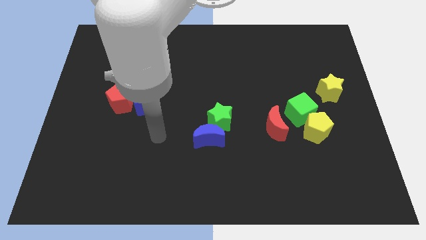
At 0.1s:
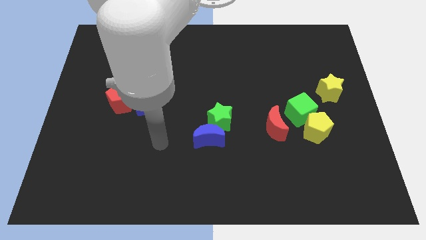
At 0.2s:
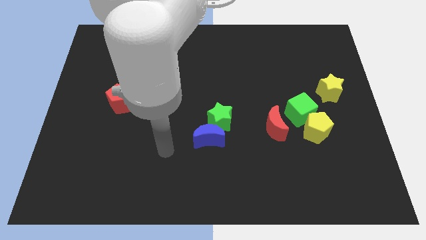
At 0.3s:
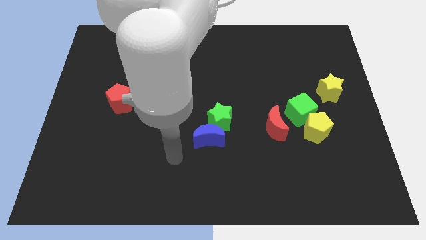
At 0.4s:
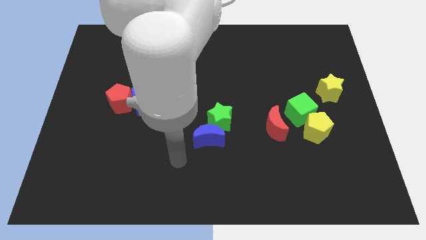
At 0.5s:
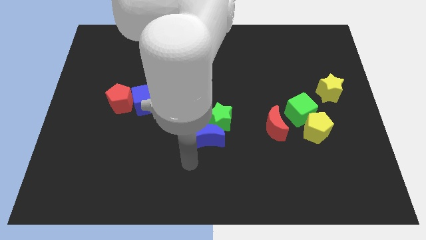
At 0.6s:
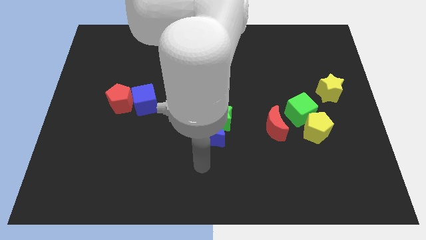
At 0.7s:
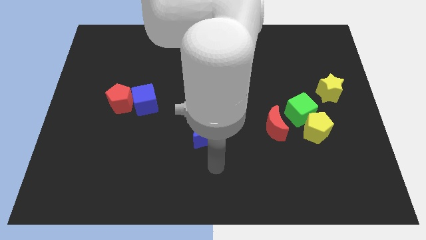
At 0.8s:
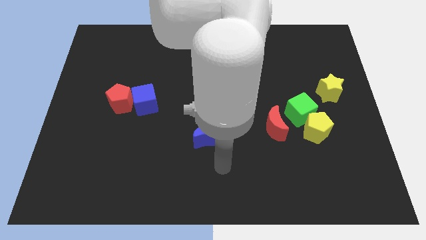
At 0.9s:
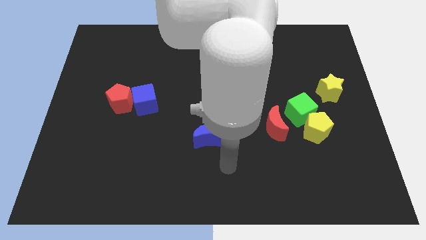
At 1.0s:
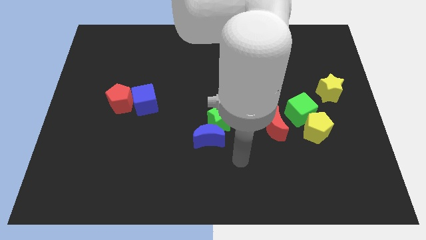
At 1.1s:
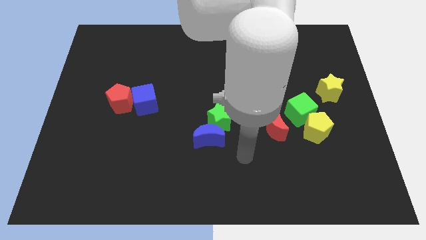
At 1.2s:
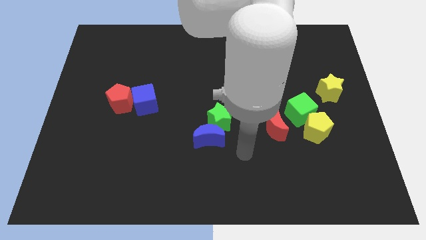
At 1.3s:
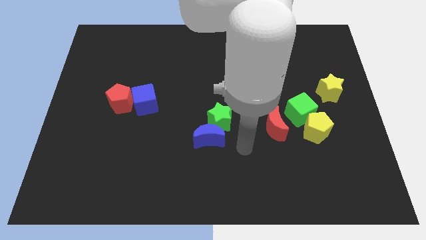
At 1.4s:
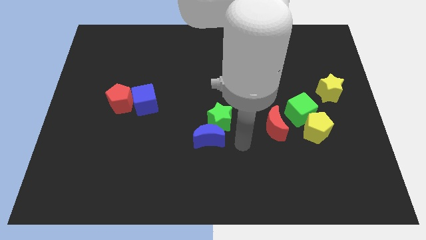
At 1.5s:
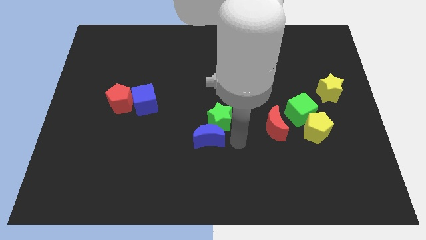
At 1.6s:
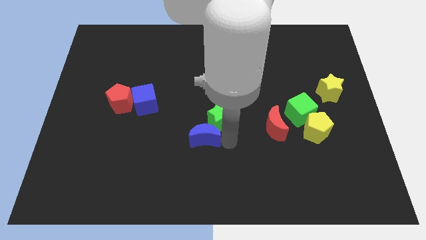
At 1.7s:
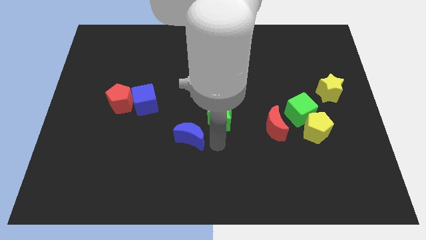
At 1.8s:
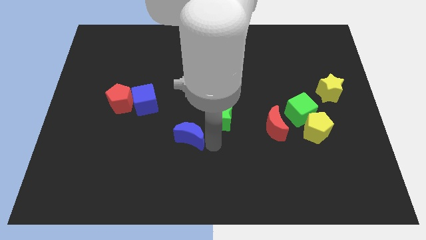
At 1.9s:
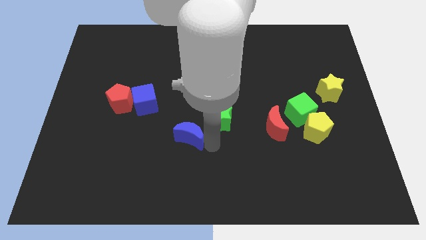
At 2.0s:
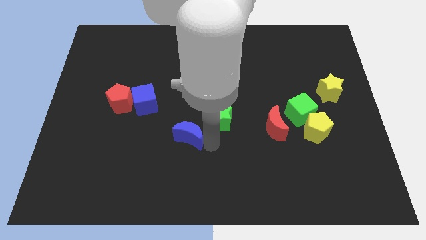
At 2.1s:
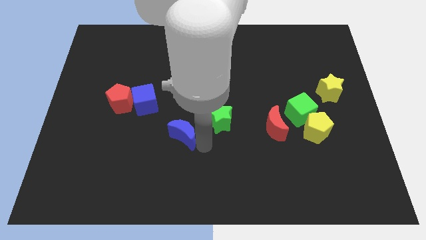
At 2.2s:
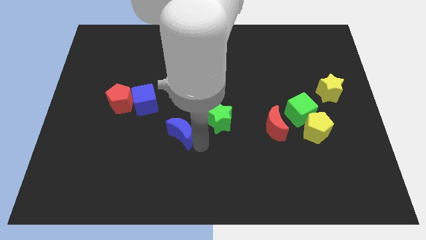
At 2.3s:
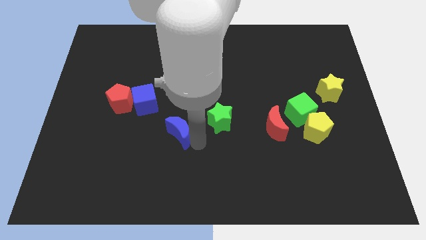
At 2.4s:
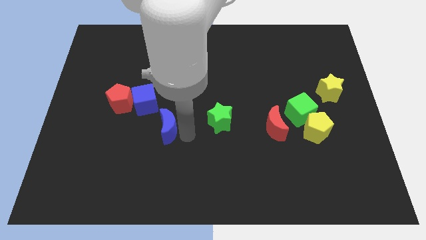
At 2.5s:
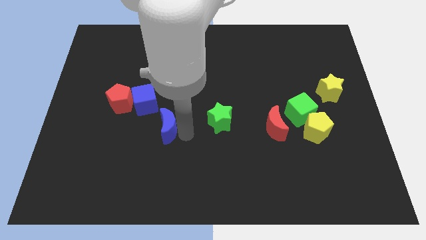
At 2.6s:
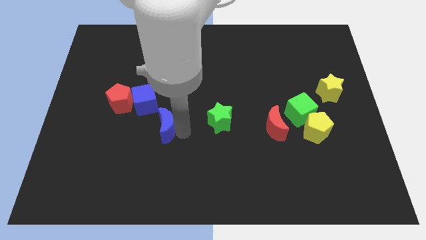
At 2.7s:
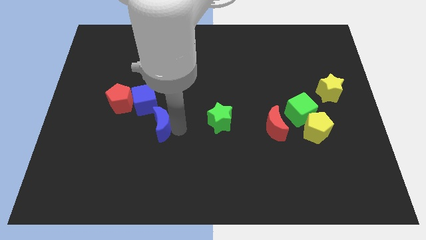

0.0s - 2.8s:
move blue moon right below the blue cube

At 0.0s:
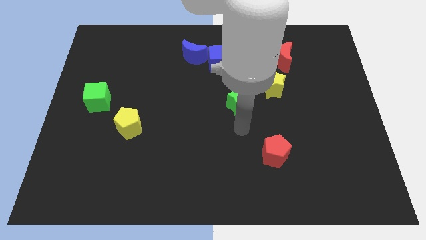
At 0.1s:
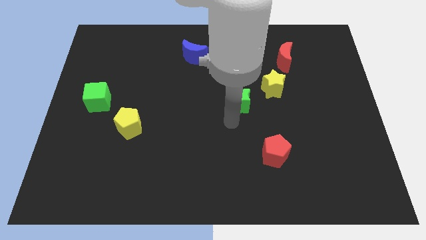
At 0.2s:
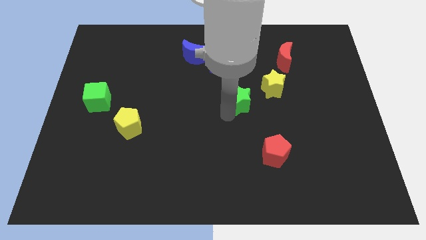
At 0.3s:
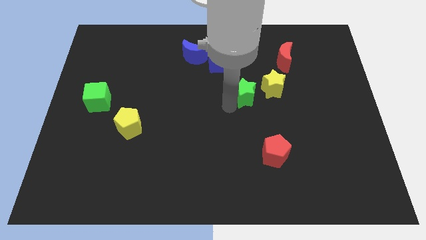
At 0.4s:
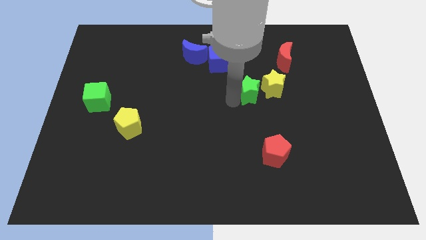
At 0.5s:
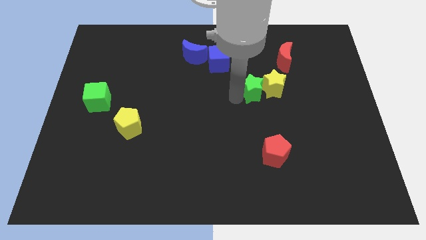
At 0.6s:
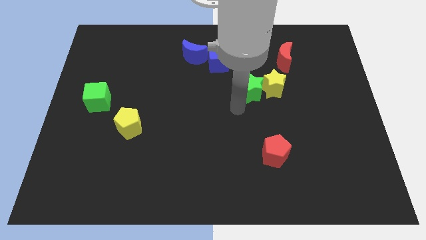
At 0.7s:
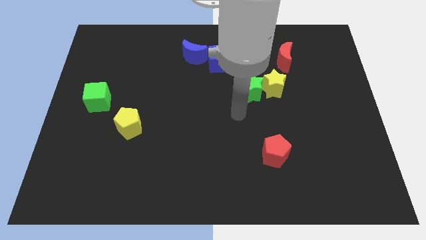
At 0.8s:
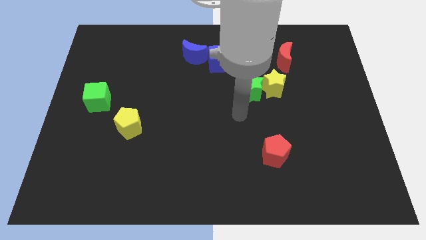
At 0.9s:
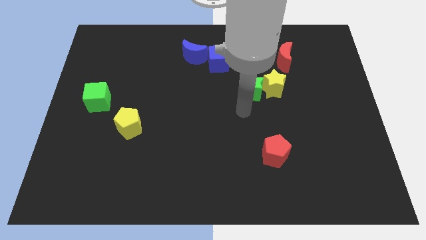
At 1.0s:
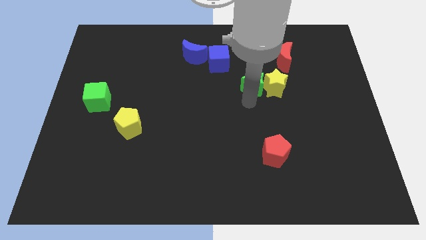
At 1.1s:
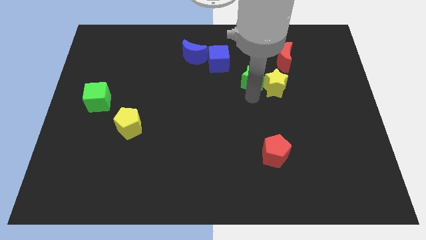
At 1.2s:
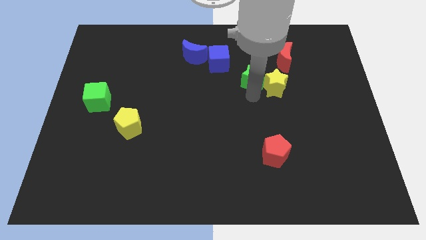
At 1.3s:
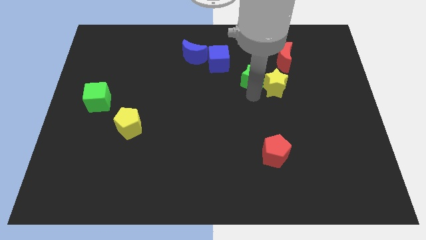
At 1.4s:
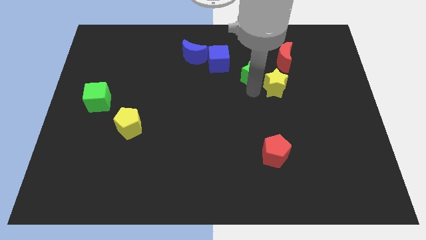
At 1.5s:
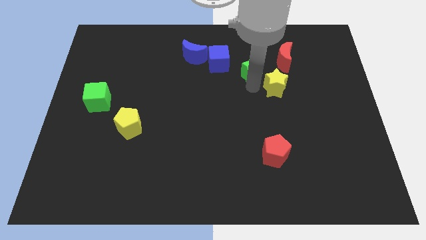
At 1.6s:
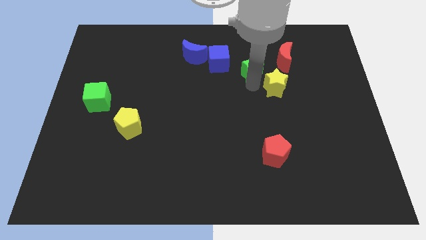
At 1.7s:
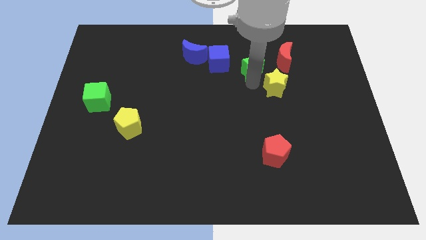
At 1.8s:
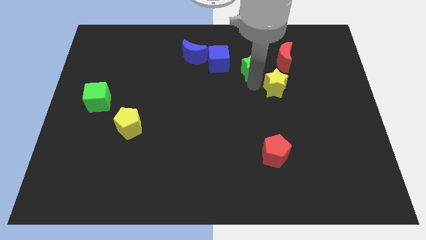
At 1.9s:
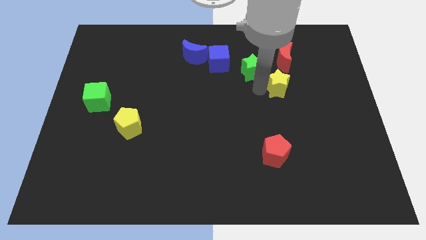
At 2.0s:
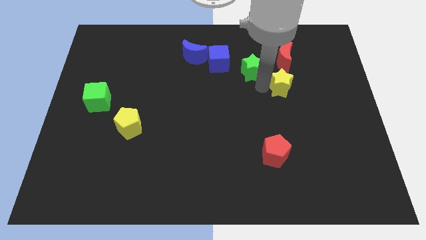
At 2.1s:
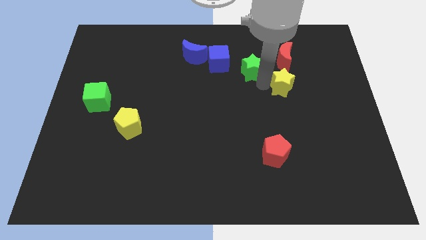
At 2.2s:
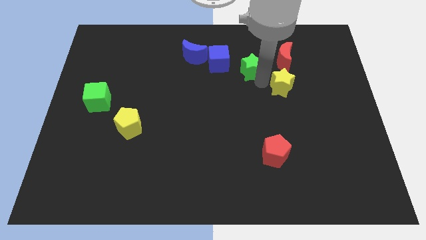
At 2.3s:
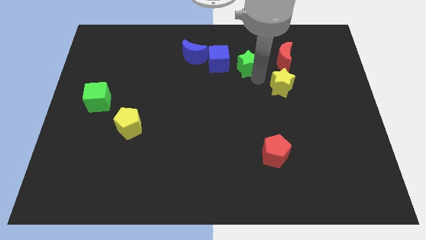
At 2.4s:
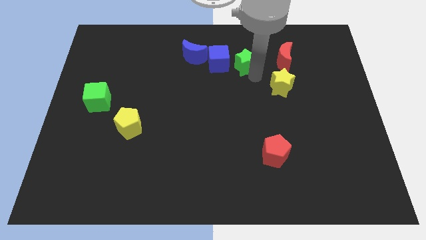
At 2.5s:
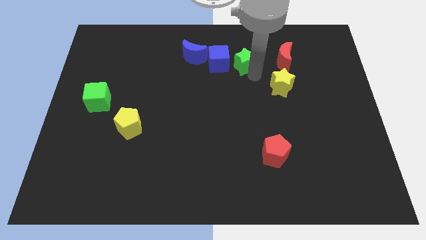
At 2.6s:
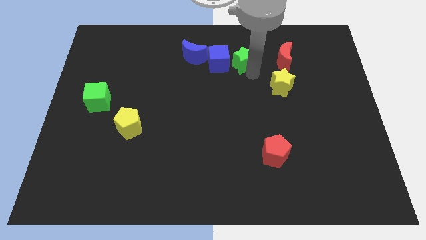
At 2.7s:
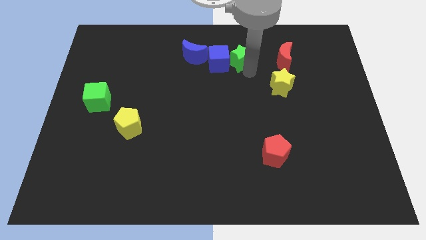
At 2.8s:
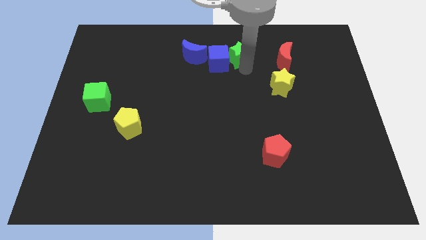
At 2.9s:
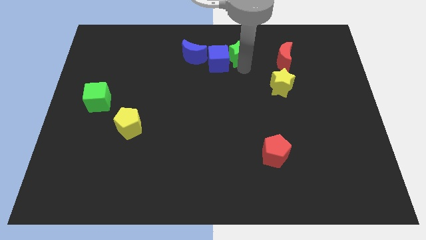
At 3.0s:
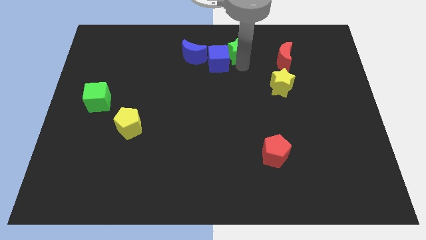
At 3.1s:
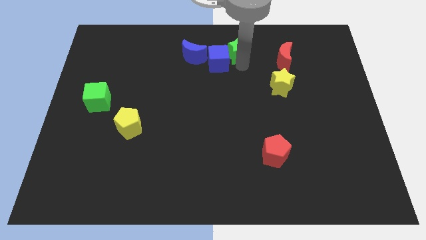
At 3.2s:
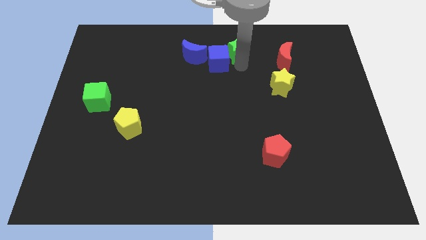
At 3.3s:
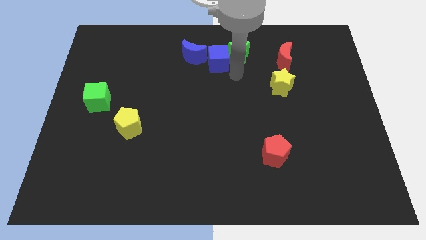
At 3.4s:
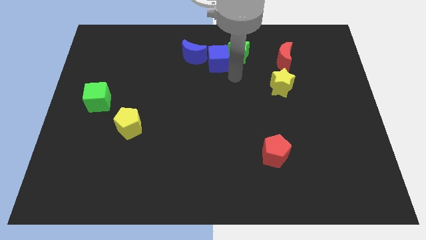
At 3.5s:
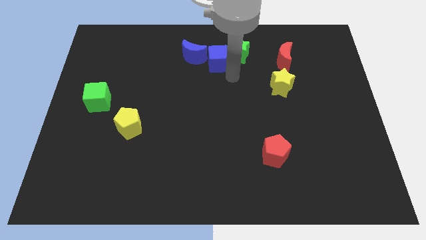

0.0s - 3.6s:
push the green star close to the blue cube

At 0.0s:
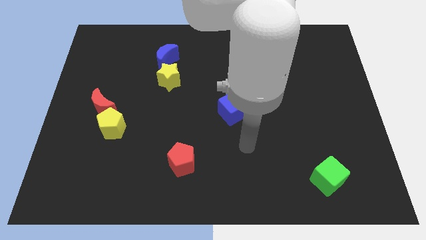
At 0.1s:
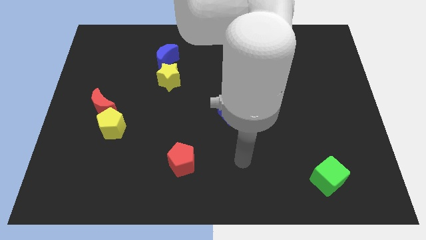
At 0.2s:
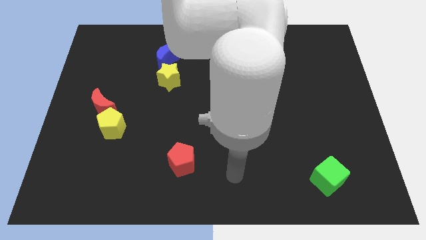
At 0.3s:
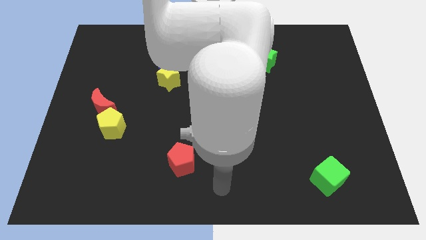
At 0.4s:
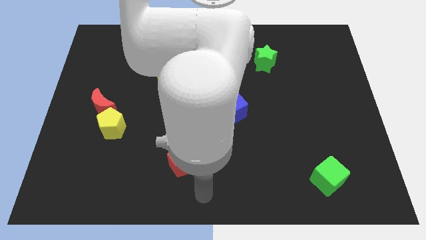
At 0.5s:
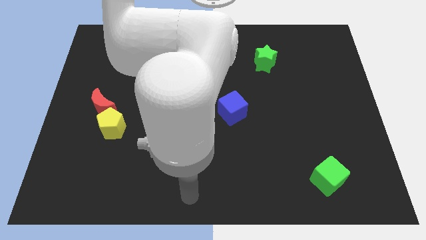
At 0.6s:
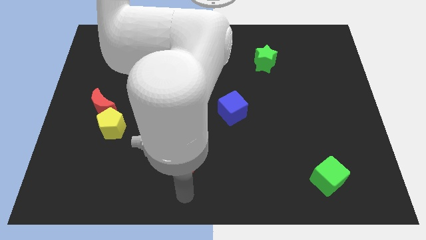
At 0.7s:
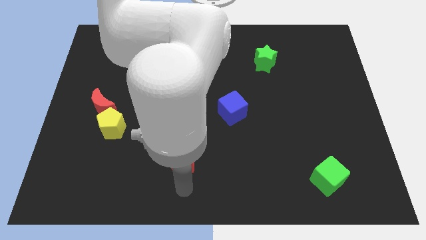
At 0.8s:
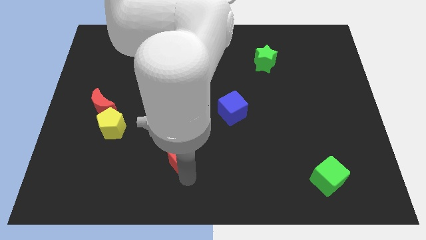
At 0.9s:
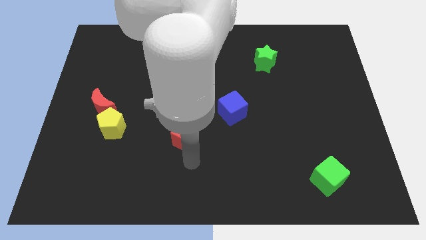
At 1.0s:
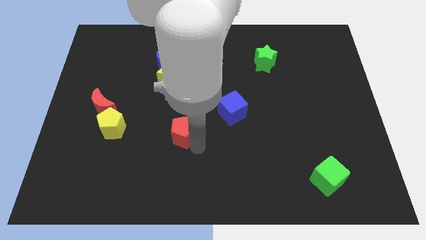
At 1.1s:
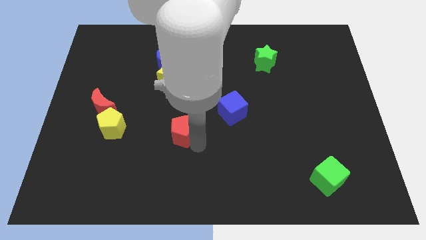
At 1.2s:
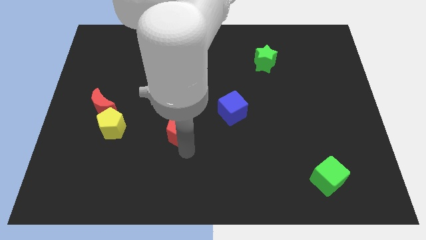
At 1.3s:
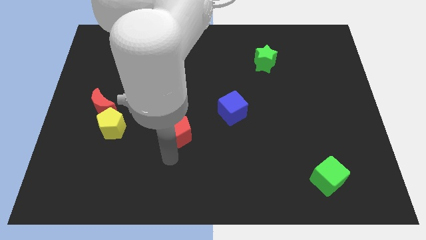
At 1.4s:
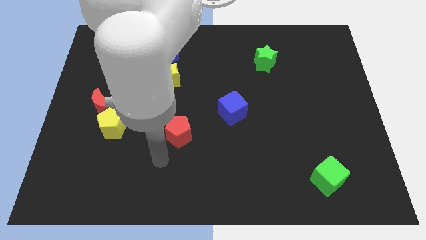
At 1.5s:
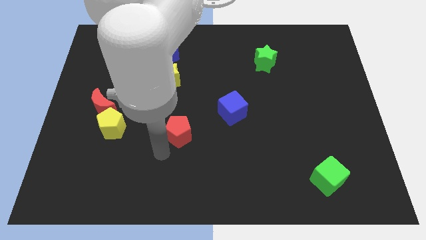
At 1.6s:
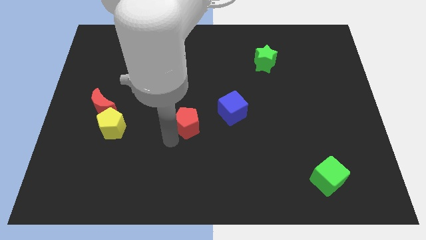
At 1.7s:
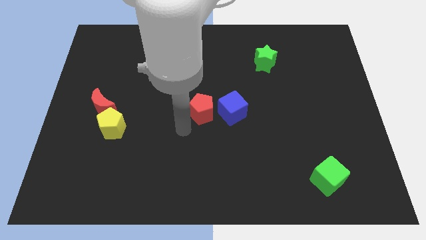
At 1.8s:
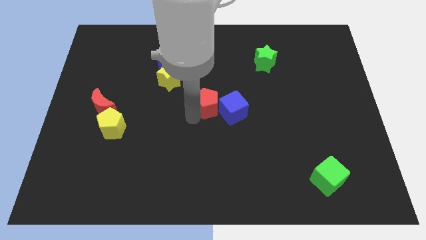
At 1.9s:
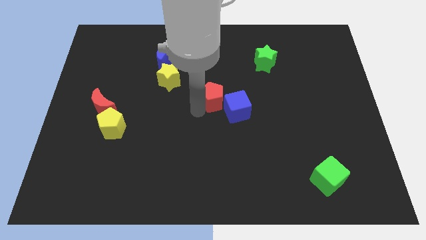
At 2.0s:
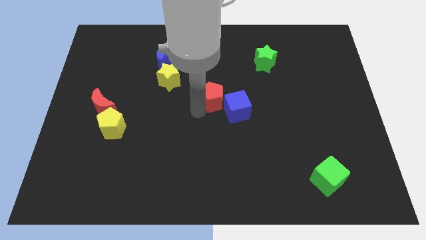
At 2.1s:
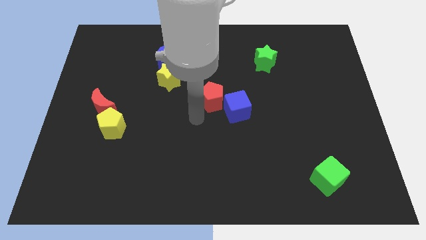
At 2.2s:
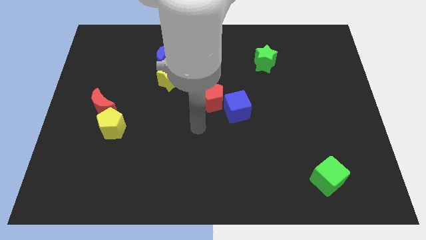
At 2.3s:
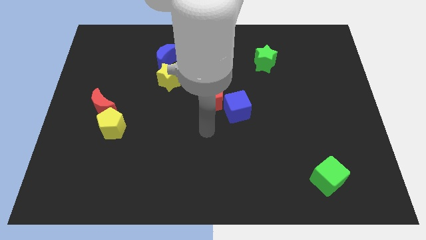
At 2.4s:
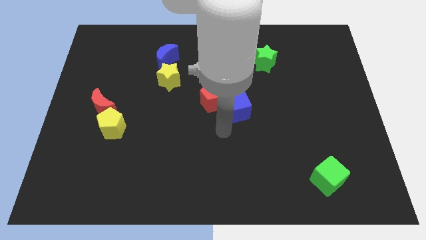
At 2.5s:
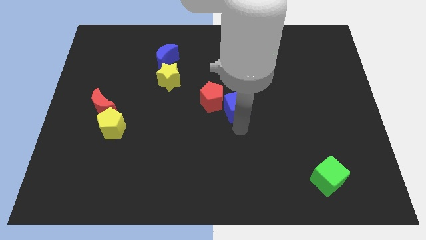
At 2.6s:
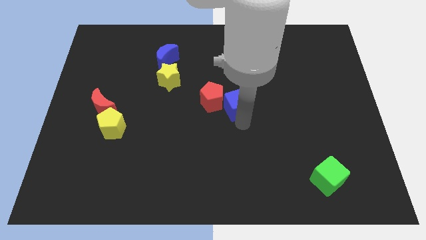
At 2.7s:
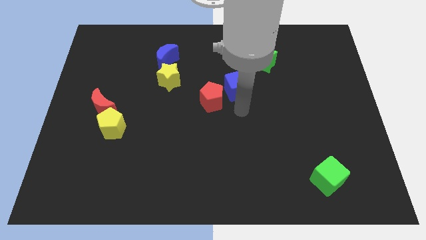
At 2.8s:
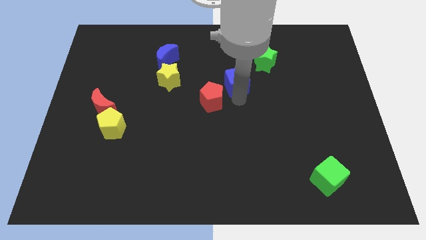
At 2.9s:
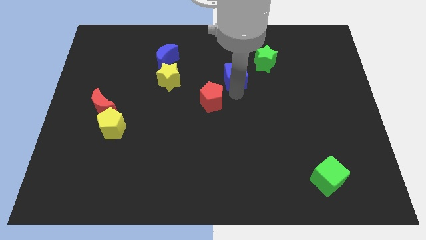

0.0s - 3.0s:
push the red pentagon and blue cube towards the centre of the board
